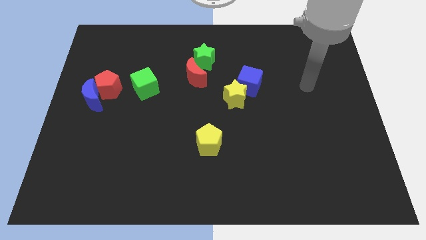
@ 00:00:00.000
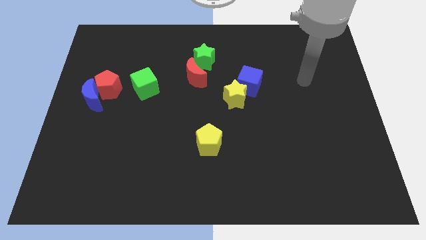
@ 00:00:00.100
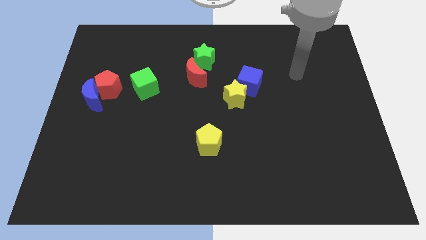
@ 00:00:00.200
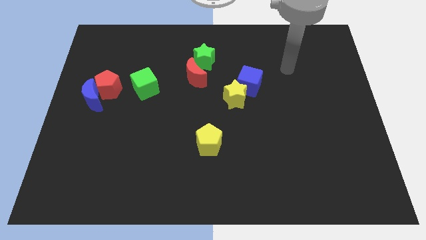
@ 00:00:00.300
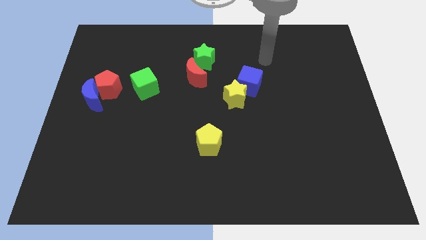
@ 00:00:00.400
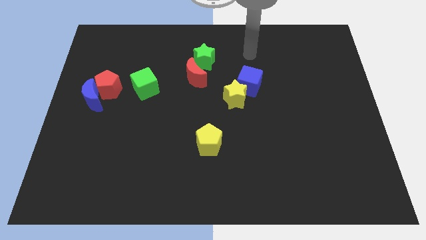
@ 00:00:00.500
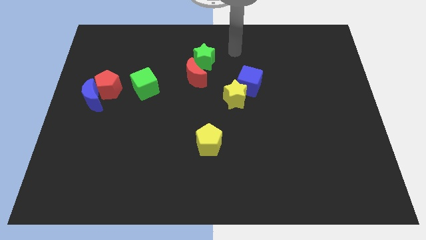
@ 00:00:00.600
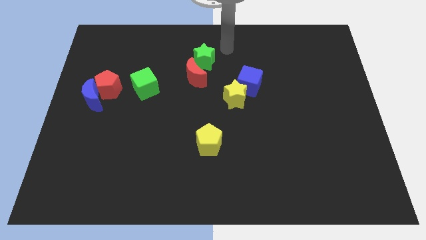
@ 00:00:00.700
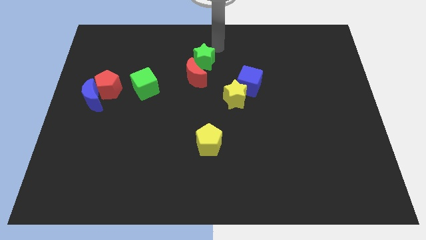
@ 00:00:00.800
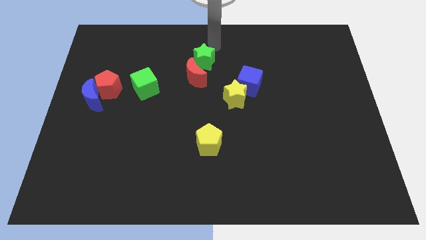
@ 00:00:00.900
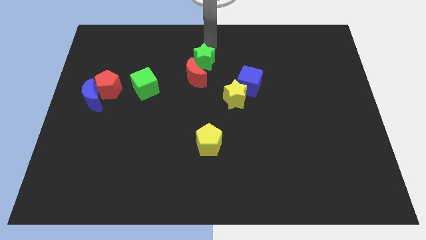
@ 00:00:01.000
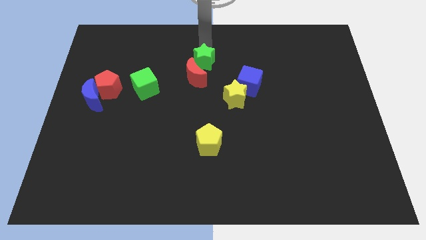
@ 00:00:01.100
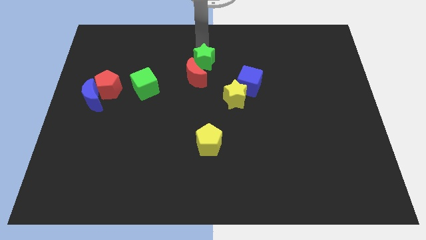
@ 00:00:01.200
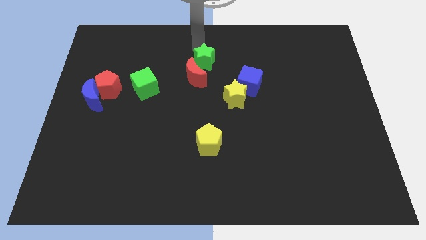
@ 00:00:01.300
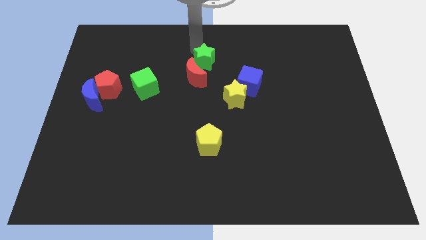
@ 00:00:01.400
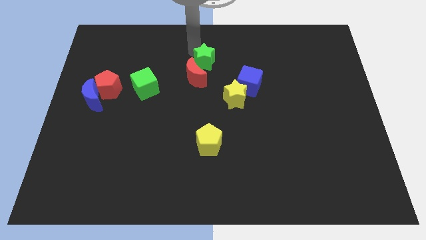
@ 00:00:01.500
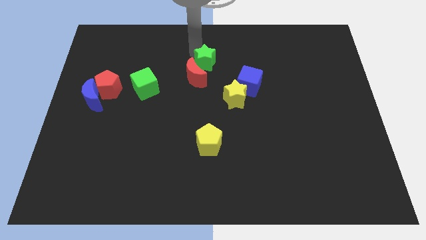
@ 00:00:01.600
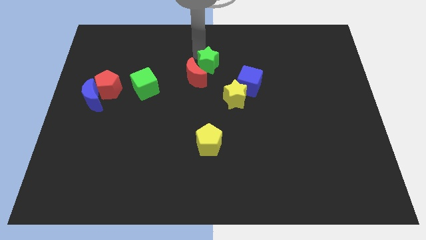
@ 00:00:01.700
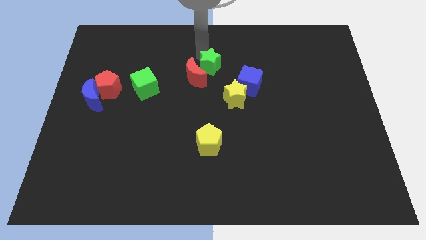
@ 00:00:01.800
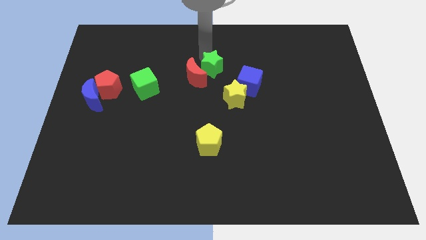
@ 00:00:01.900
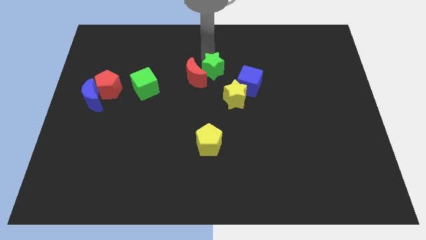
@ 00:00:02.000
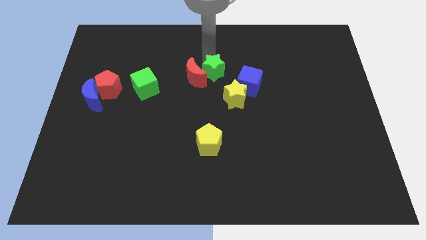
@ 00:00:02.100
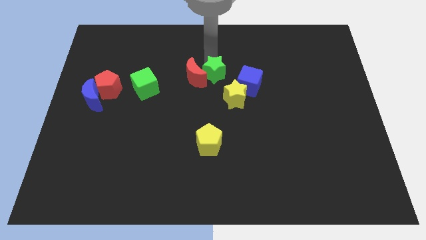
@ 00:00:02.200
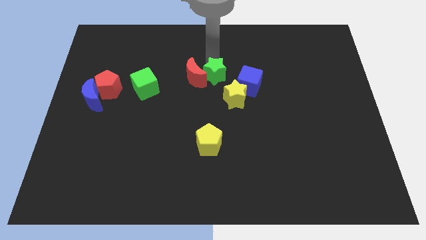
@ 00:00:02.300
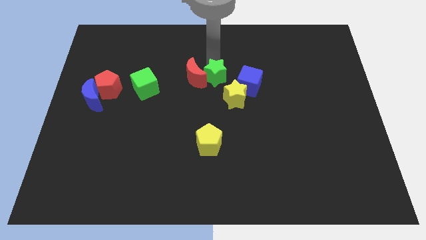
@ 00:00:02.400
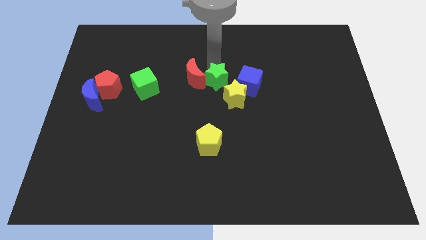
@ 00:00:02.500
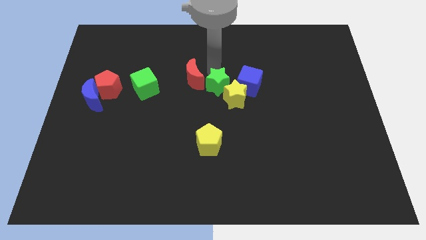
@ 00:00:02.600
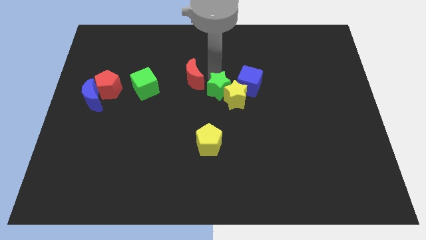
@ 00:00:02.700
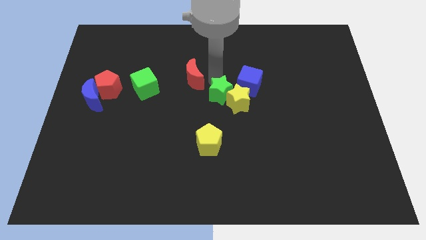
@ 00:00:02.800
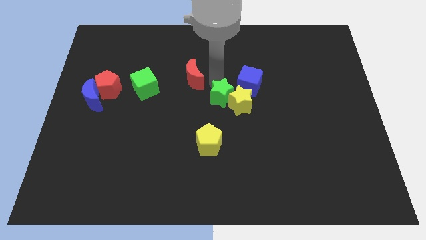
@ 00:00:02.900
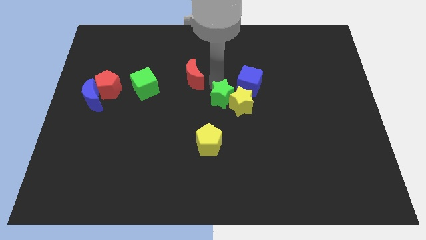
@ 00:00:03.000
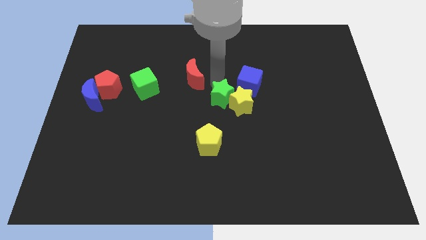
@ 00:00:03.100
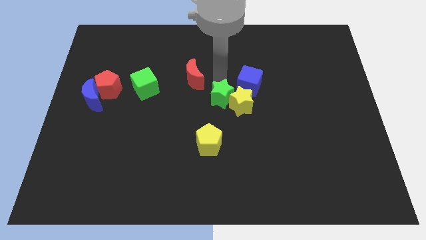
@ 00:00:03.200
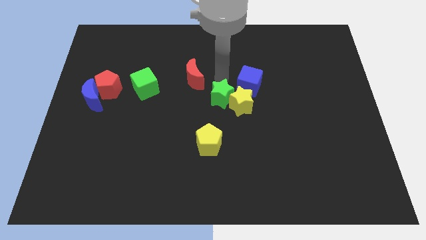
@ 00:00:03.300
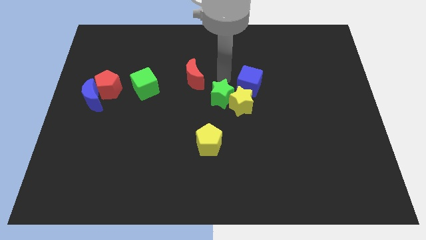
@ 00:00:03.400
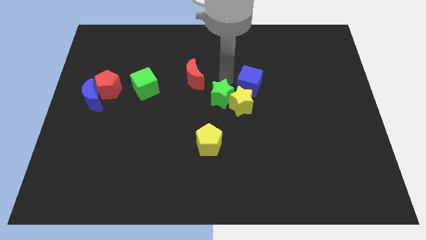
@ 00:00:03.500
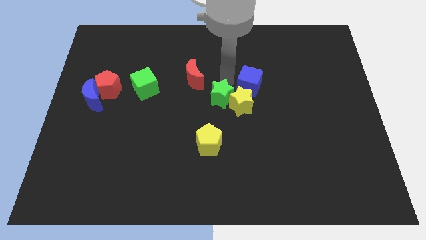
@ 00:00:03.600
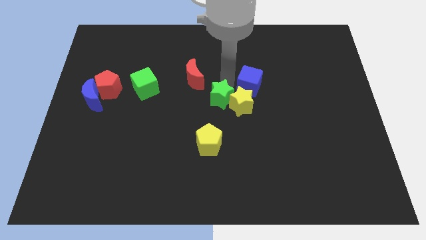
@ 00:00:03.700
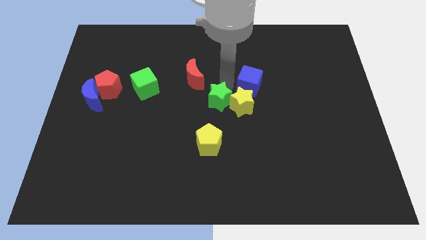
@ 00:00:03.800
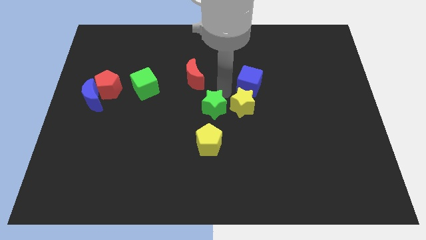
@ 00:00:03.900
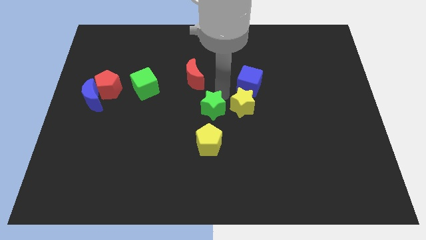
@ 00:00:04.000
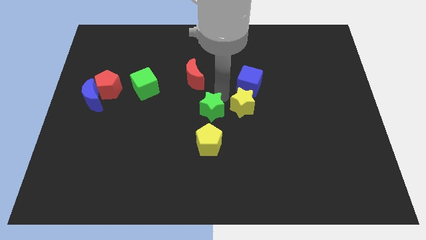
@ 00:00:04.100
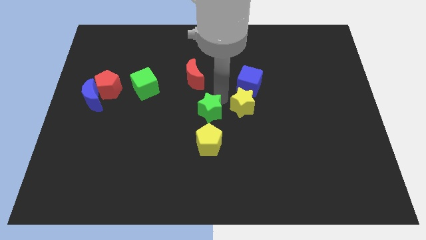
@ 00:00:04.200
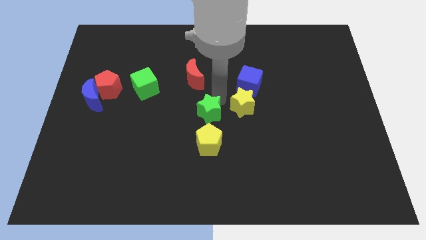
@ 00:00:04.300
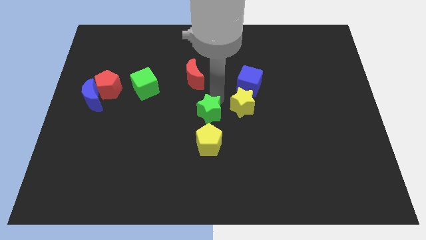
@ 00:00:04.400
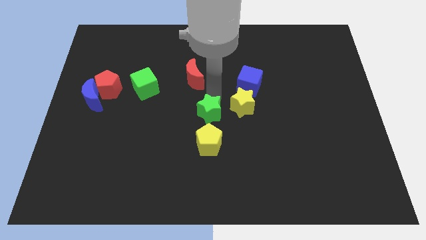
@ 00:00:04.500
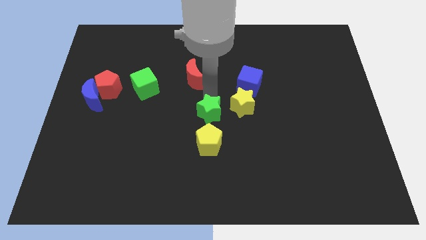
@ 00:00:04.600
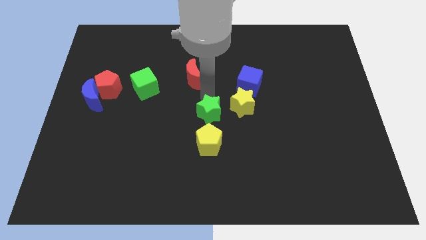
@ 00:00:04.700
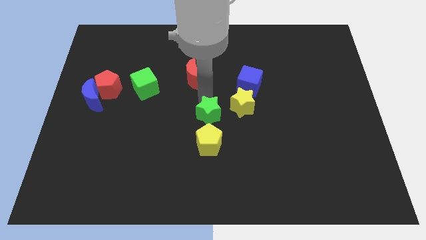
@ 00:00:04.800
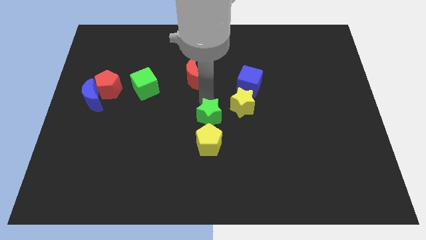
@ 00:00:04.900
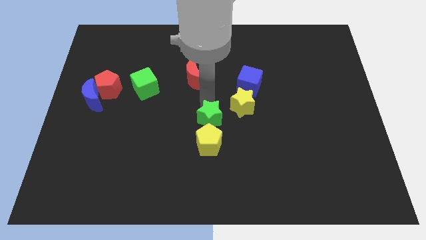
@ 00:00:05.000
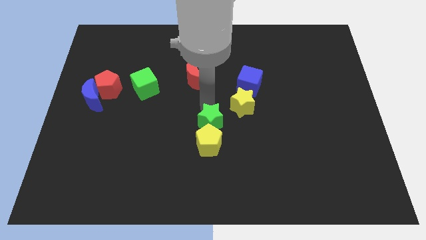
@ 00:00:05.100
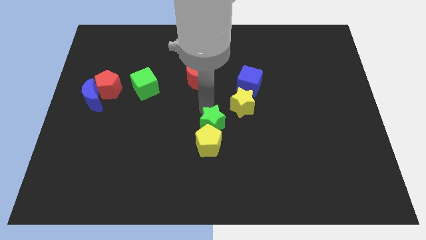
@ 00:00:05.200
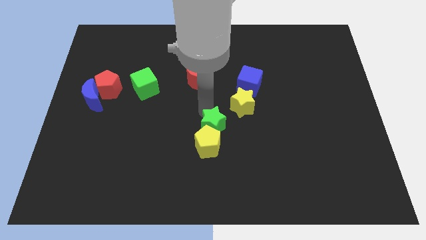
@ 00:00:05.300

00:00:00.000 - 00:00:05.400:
put the green star close to the yellow pentagon

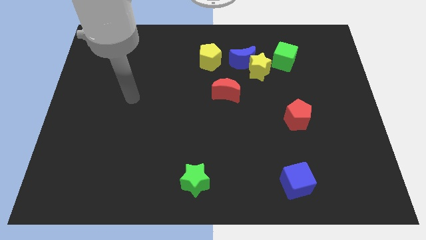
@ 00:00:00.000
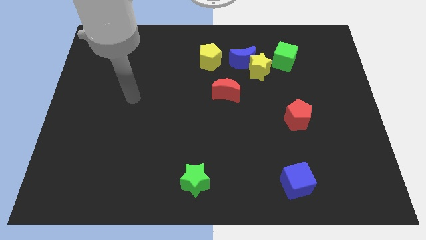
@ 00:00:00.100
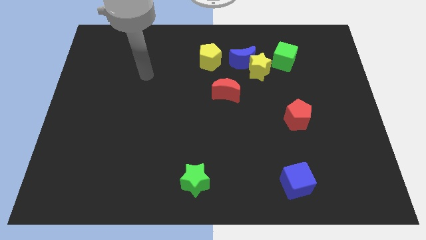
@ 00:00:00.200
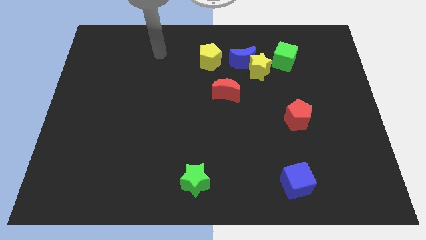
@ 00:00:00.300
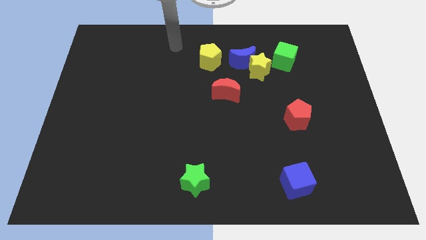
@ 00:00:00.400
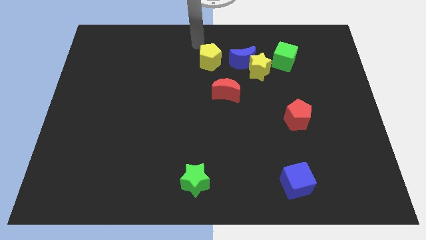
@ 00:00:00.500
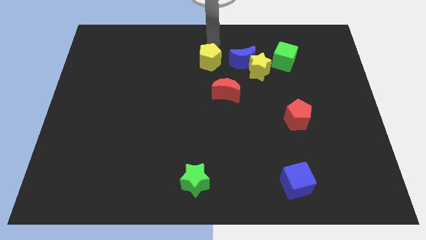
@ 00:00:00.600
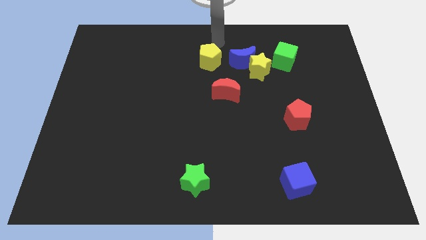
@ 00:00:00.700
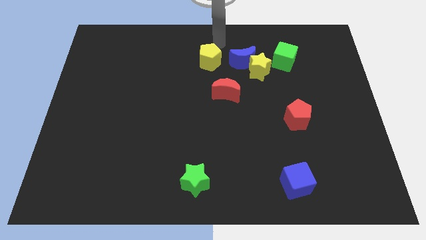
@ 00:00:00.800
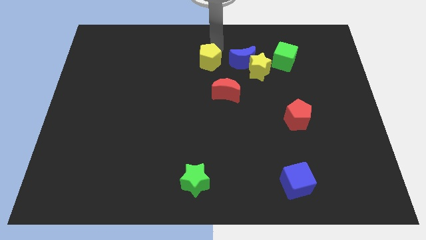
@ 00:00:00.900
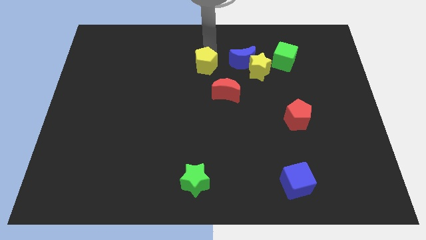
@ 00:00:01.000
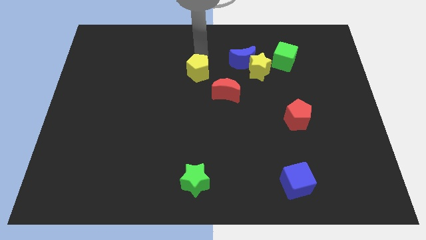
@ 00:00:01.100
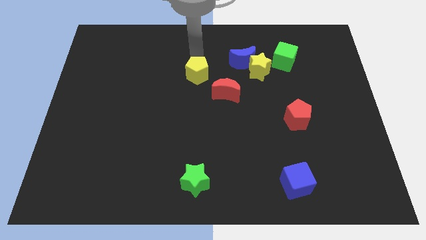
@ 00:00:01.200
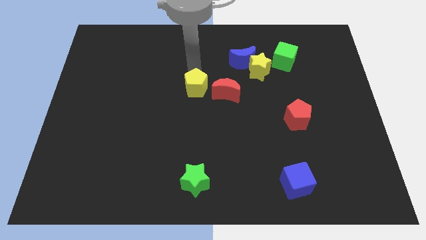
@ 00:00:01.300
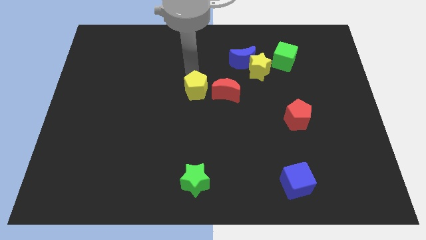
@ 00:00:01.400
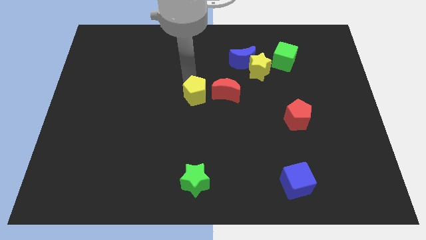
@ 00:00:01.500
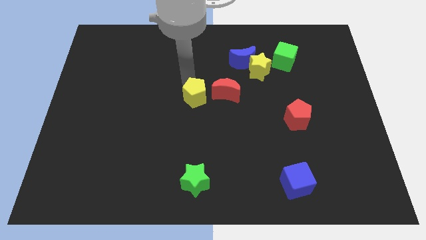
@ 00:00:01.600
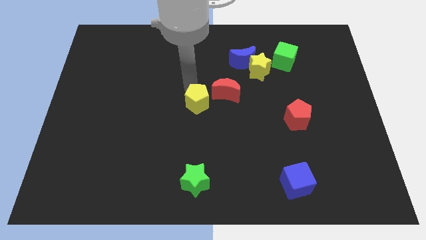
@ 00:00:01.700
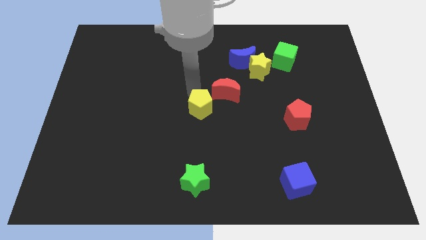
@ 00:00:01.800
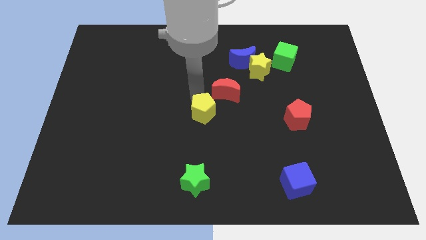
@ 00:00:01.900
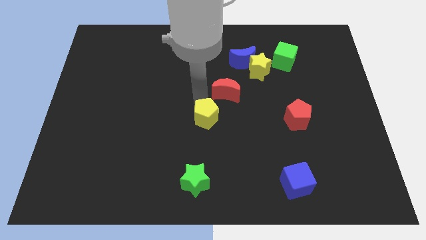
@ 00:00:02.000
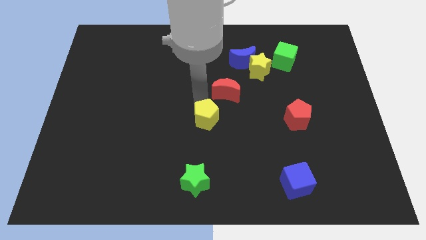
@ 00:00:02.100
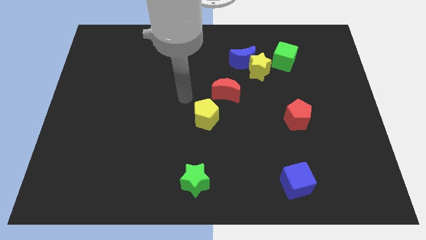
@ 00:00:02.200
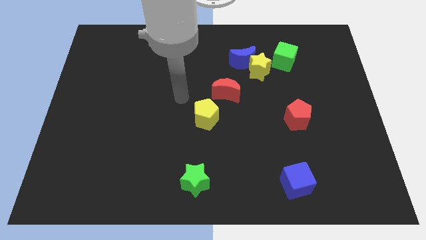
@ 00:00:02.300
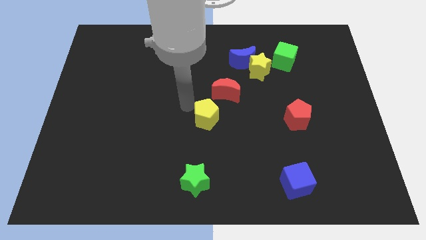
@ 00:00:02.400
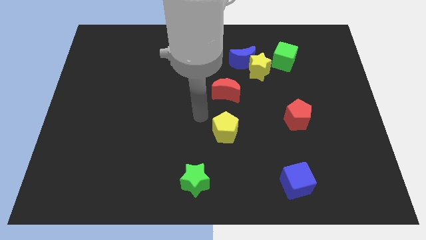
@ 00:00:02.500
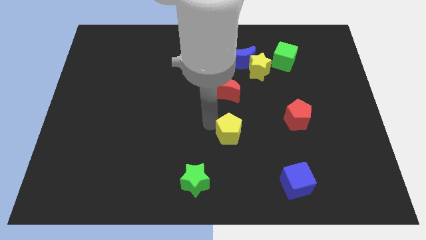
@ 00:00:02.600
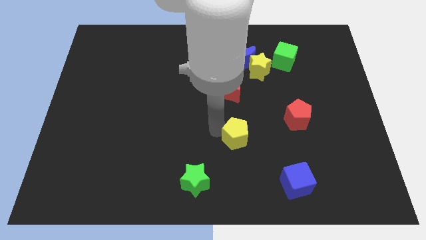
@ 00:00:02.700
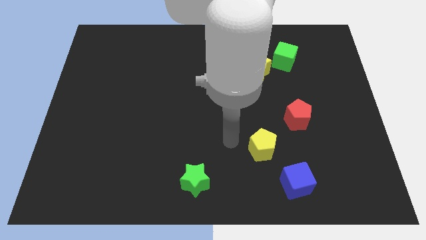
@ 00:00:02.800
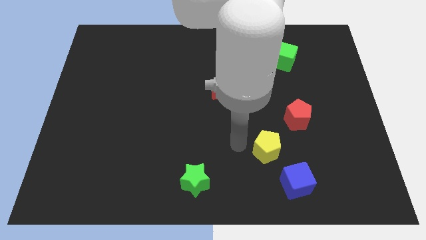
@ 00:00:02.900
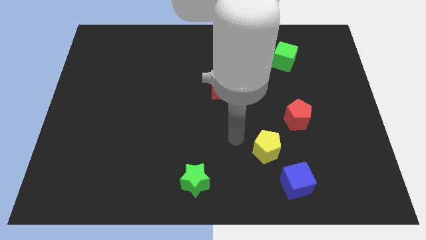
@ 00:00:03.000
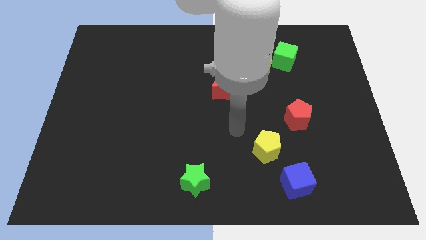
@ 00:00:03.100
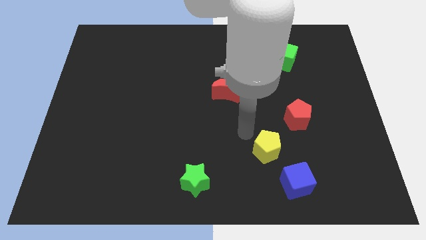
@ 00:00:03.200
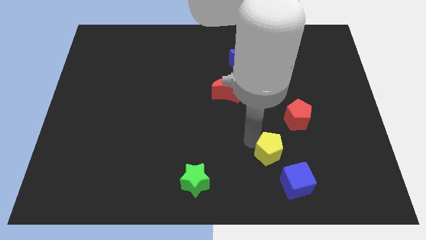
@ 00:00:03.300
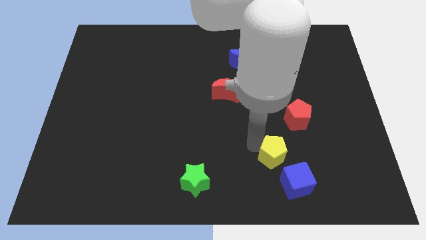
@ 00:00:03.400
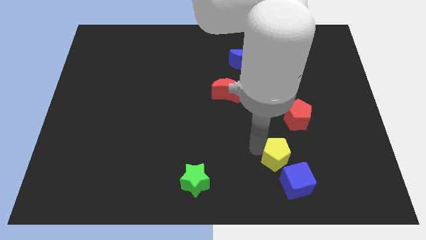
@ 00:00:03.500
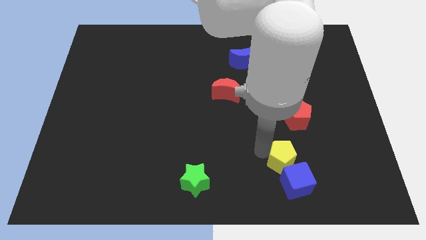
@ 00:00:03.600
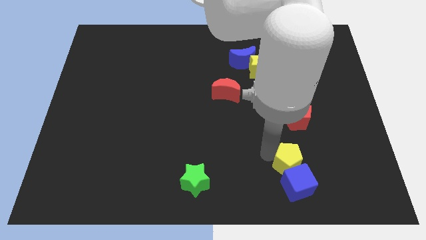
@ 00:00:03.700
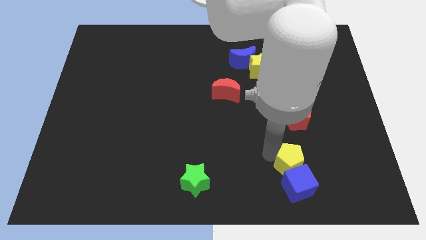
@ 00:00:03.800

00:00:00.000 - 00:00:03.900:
slide the yellow pentagon close to the blue cube
